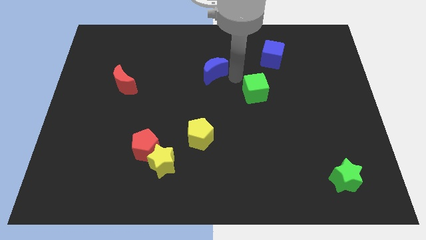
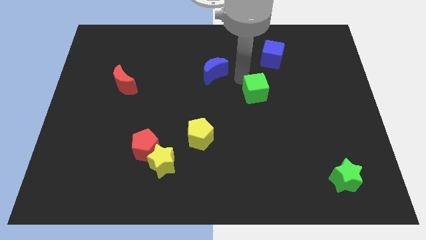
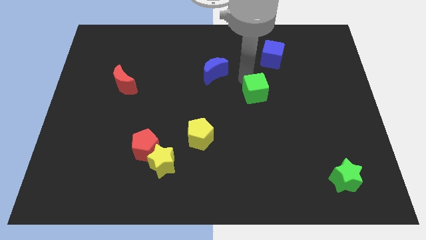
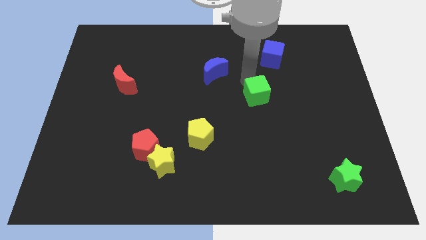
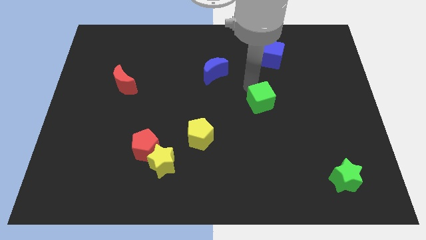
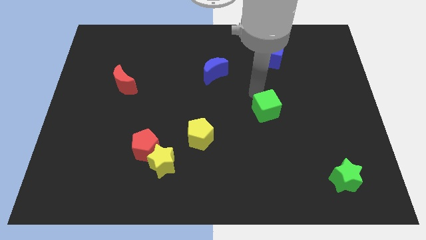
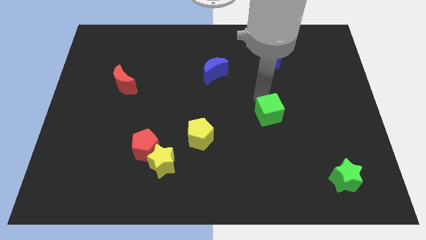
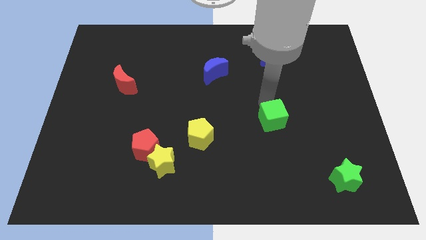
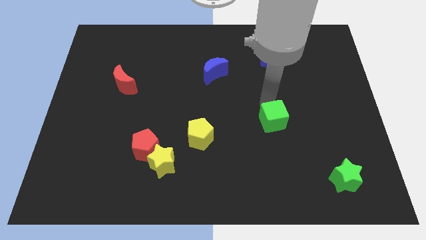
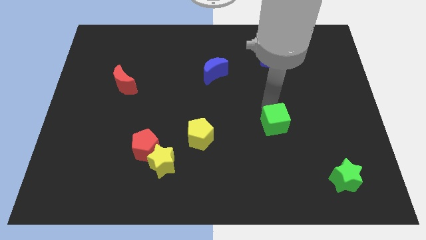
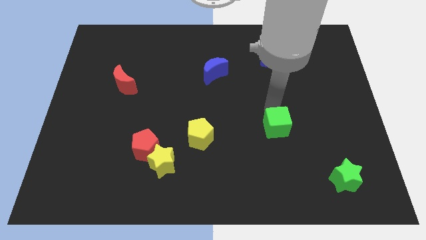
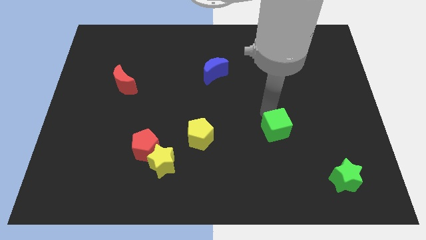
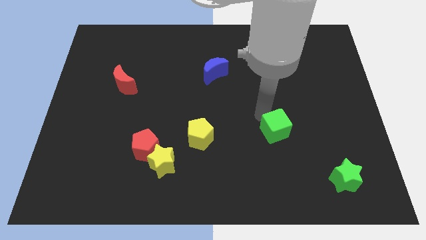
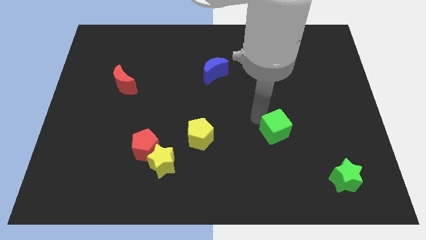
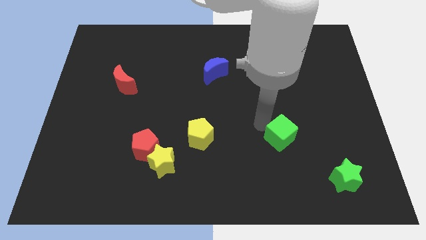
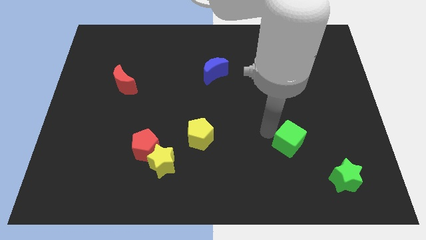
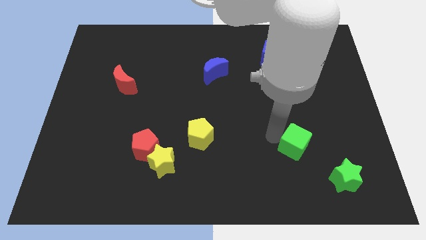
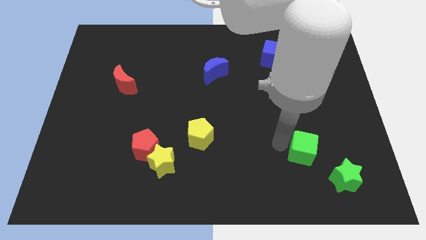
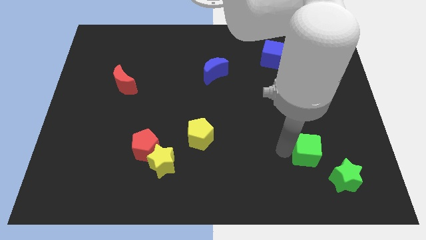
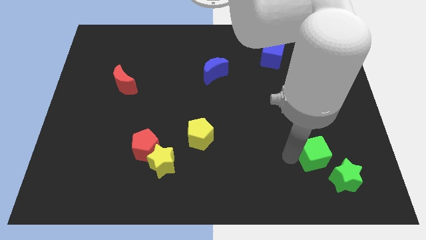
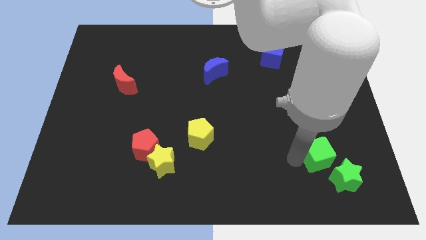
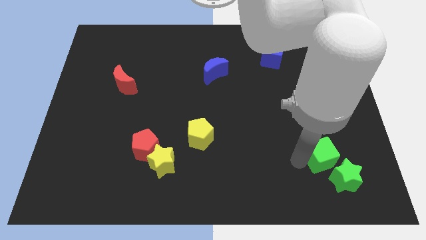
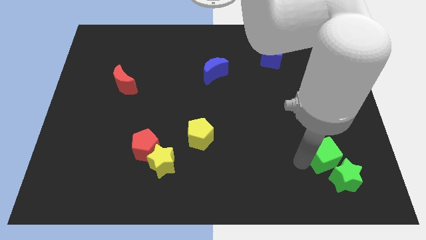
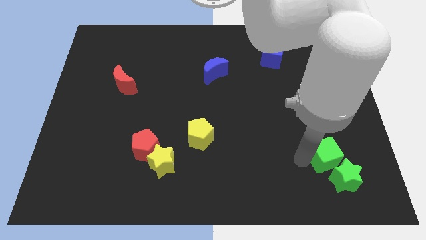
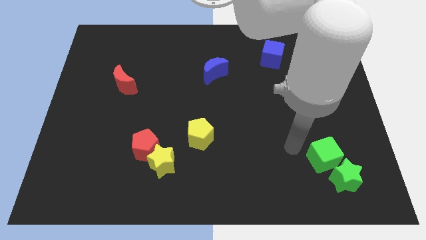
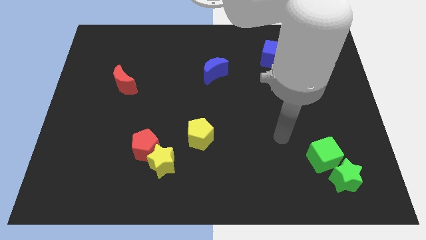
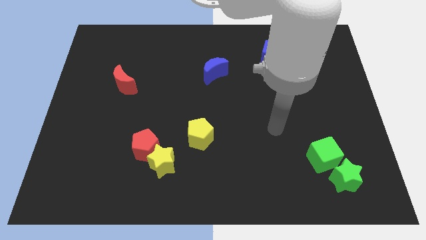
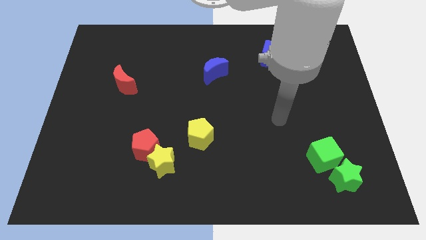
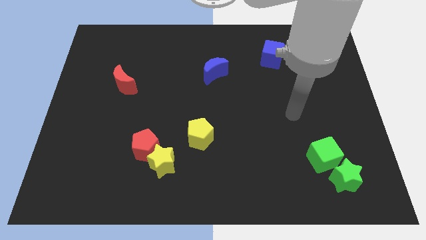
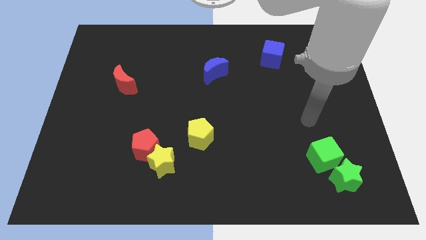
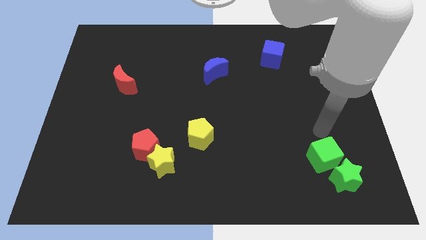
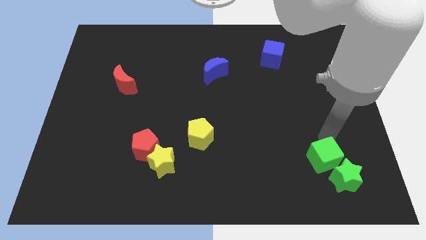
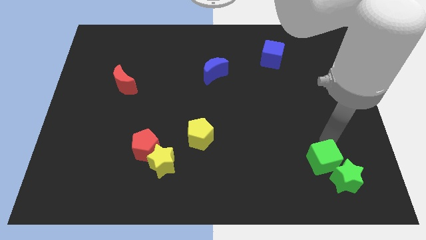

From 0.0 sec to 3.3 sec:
move the green cube into the green star

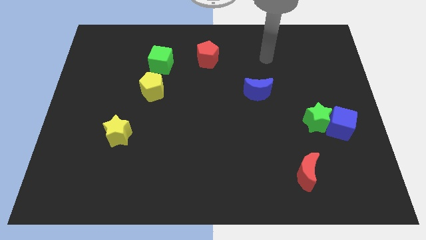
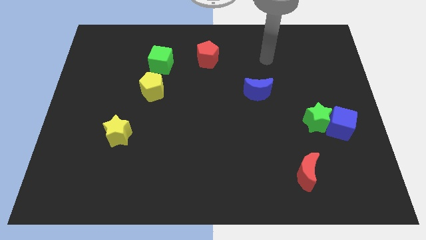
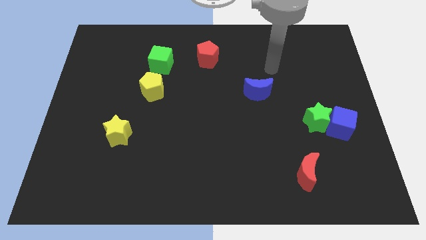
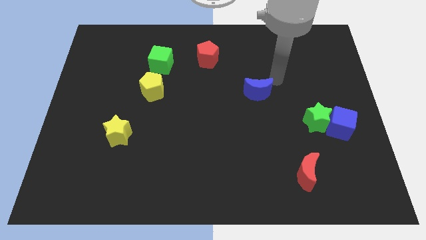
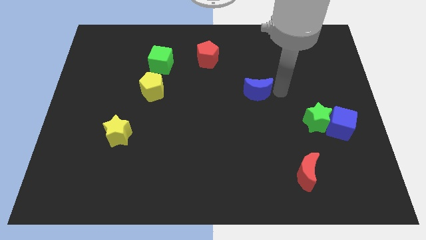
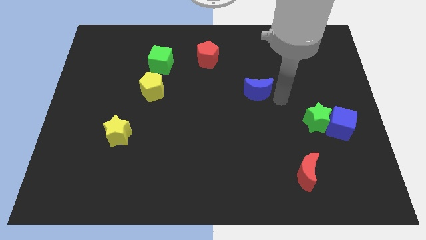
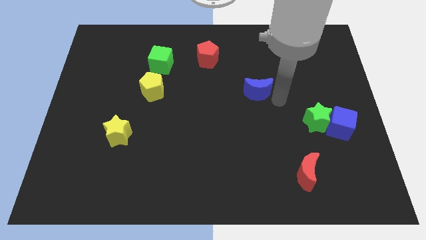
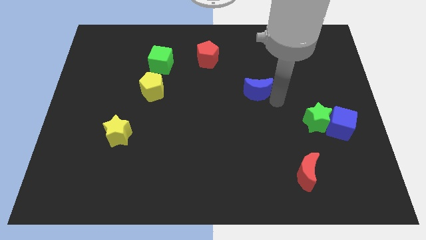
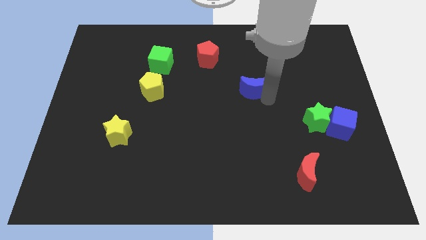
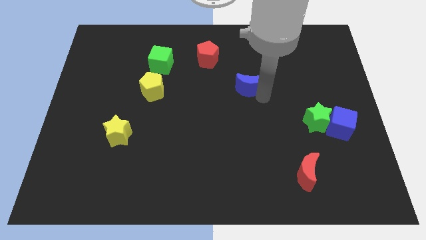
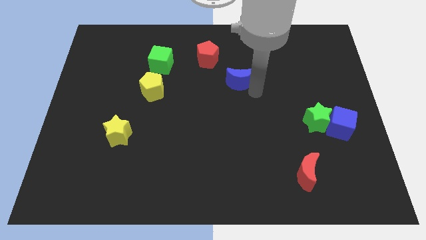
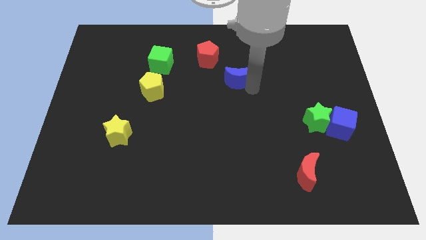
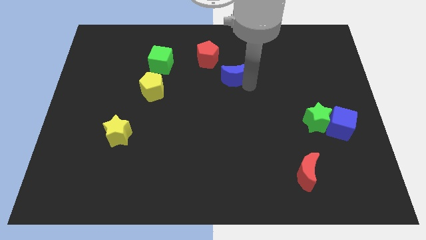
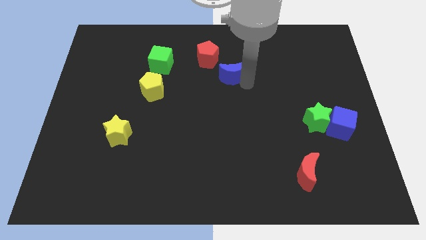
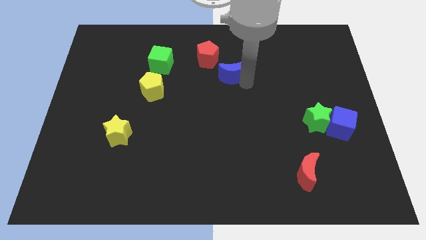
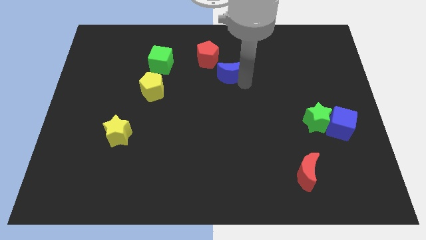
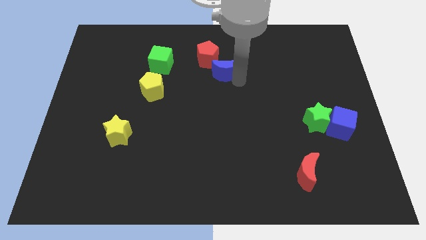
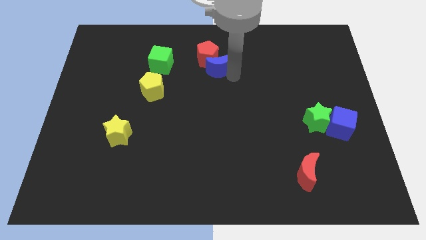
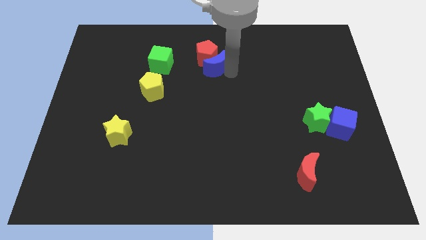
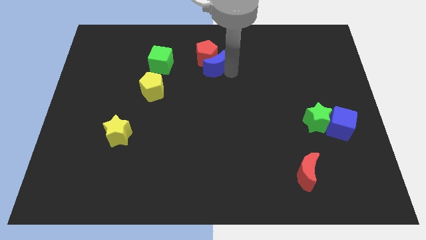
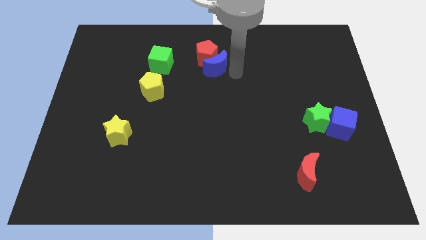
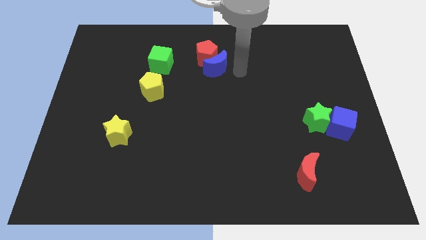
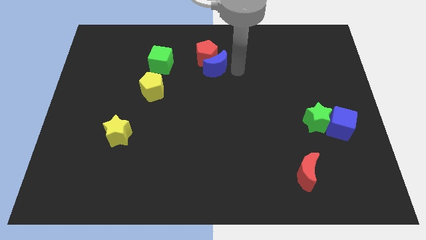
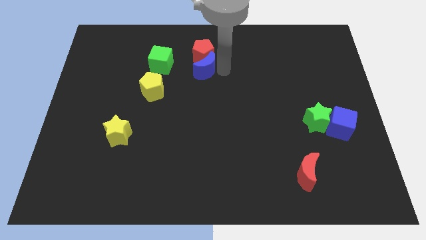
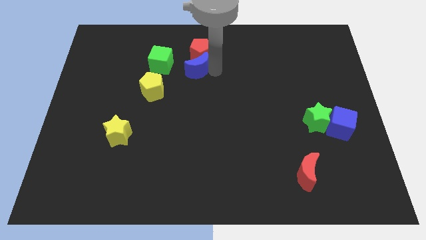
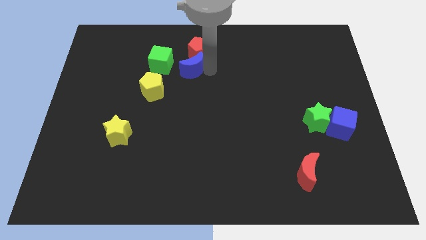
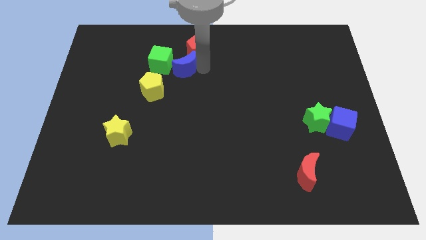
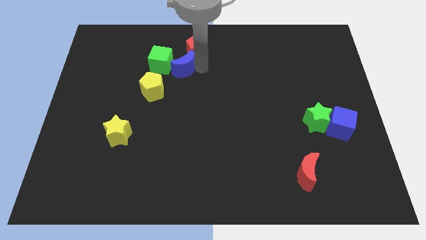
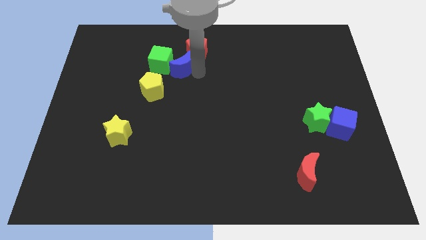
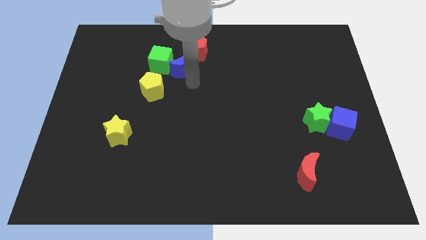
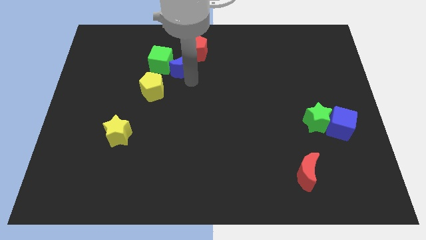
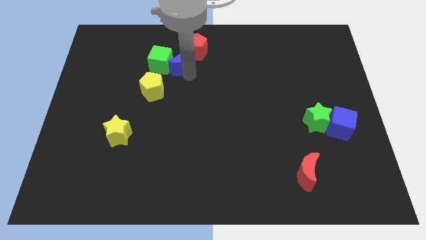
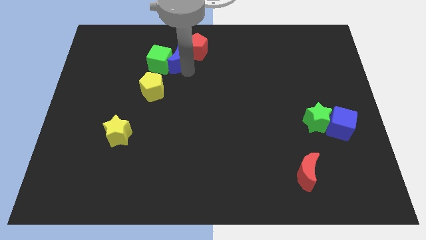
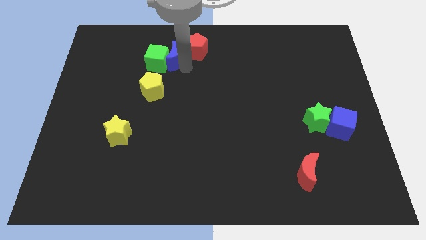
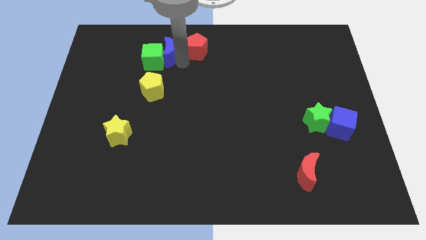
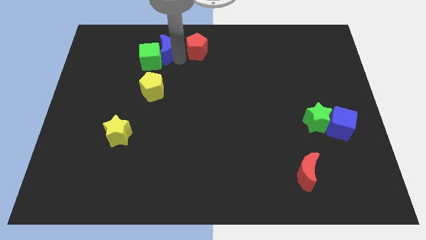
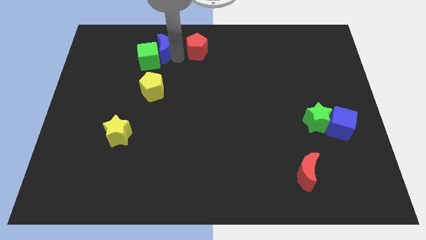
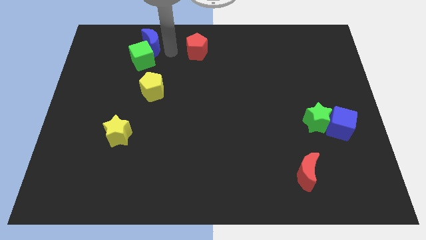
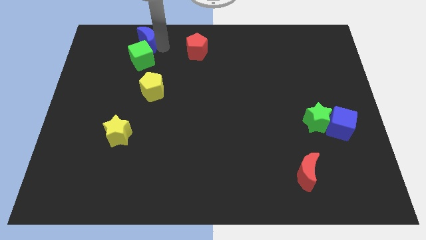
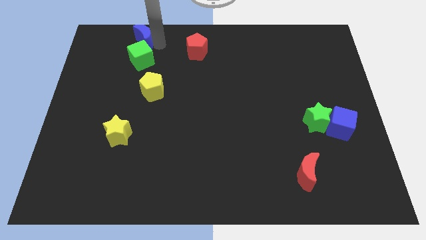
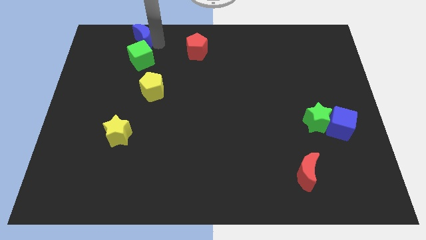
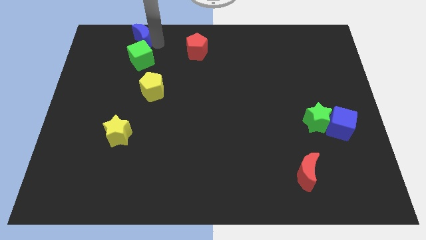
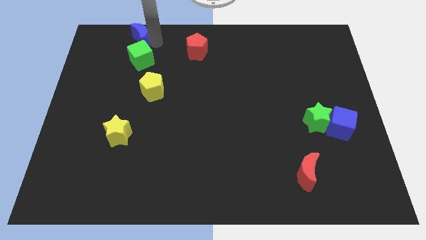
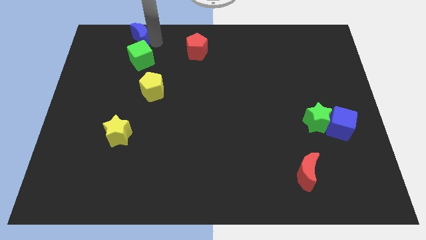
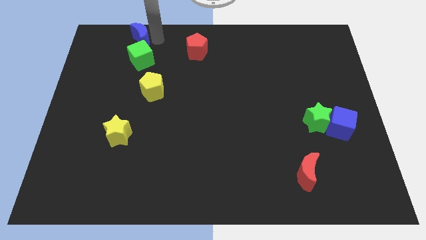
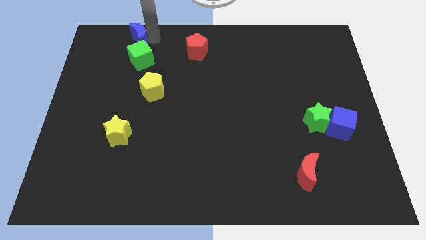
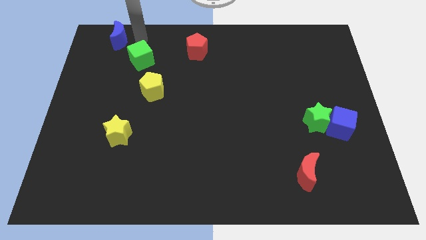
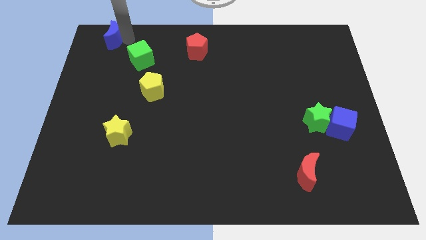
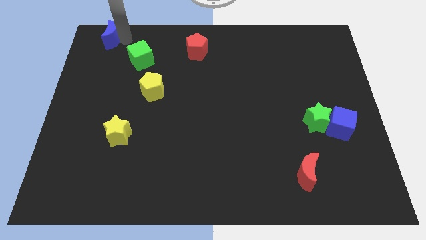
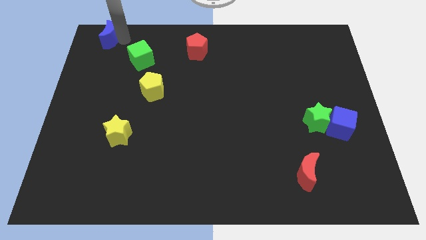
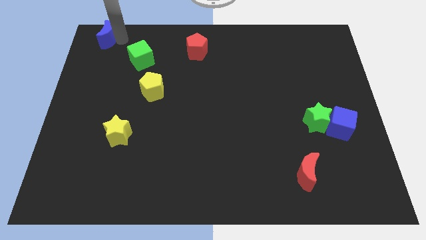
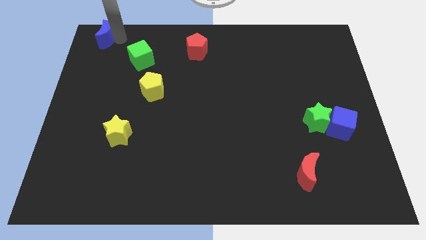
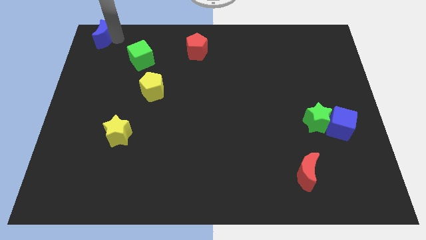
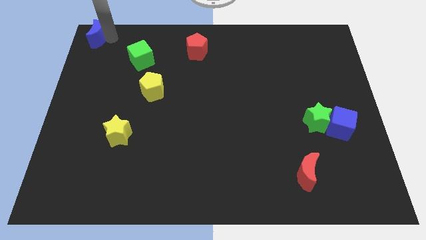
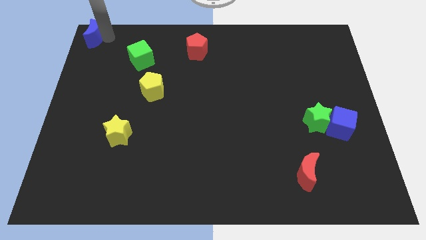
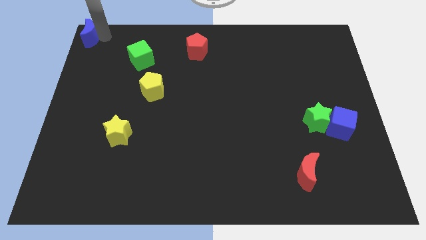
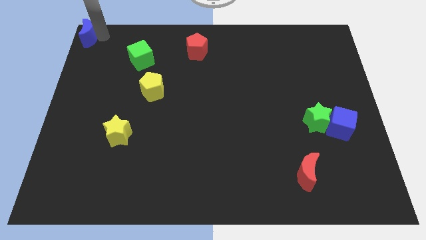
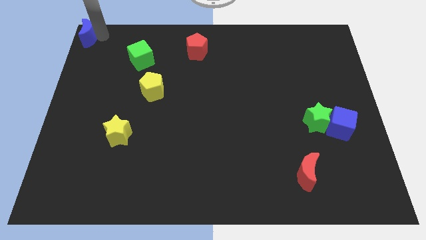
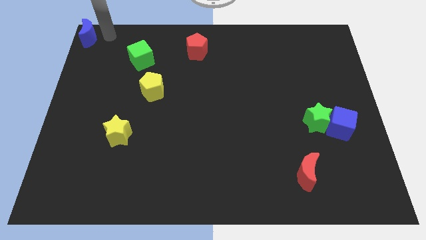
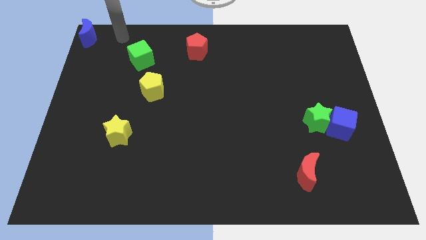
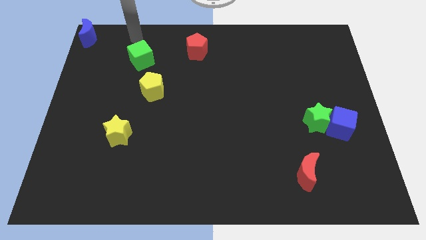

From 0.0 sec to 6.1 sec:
slide the blue moon at the top left corner
